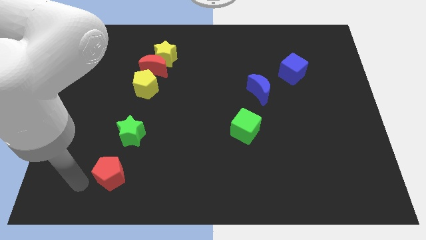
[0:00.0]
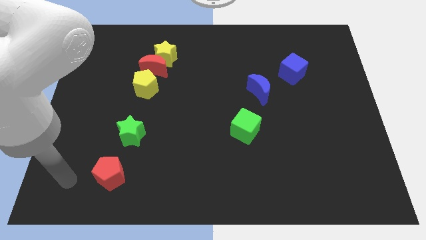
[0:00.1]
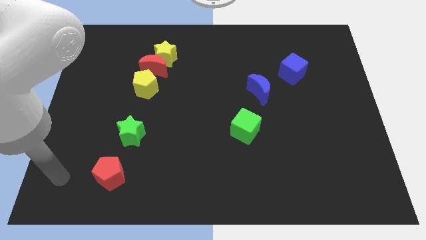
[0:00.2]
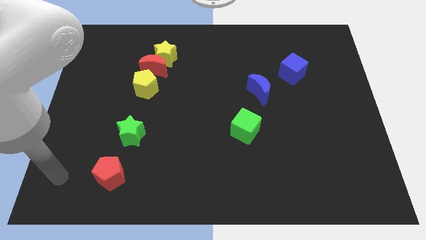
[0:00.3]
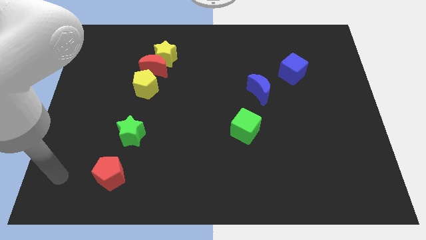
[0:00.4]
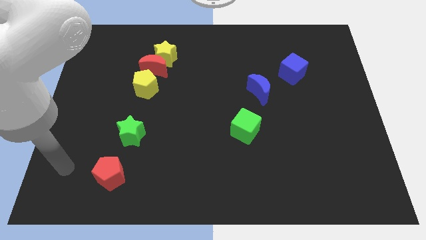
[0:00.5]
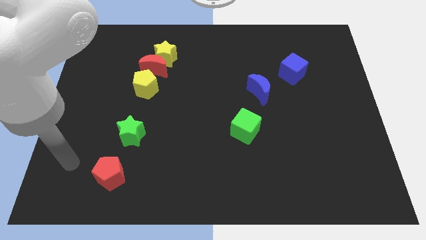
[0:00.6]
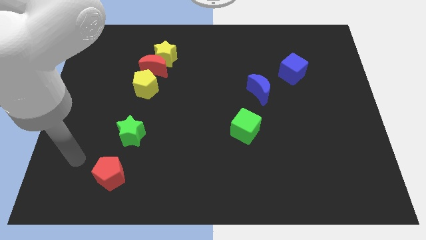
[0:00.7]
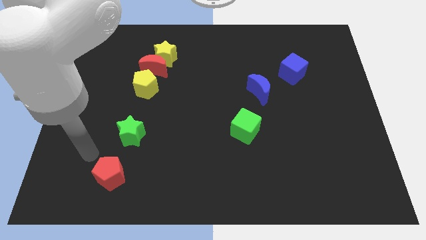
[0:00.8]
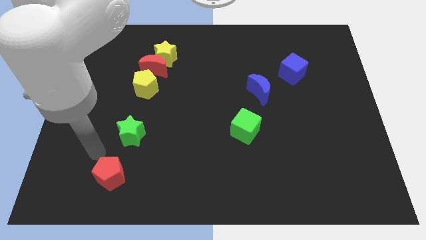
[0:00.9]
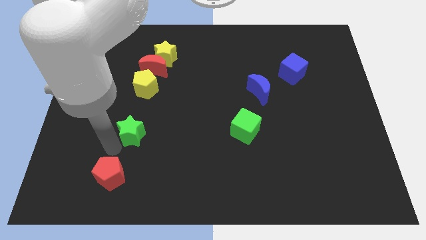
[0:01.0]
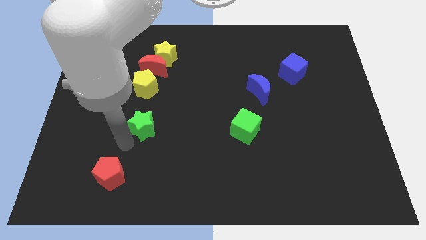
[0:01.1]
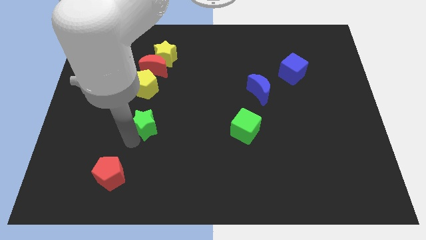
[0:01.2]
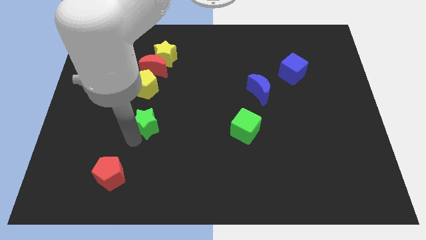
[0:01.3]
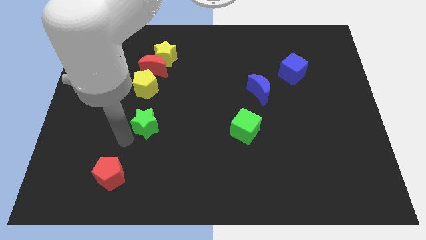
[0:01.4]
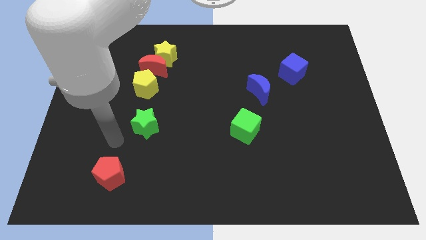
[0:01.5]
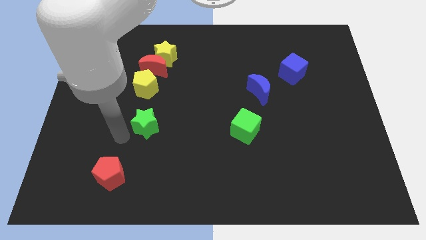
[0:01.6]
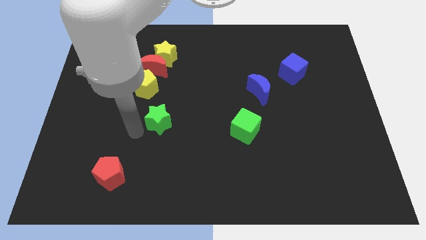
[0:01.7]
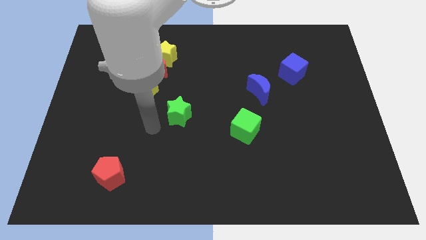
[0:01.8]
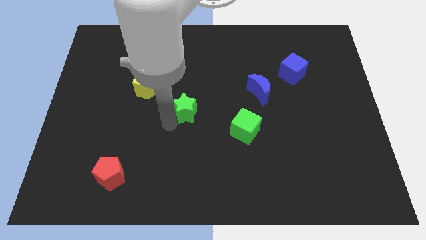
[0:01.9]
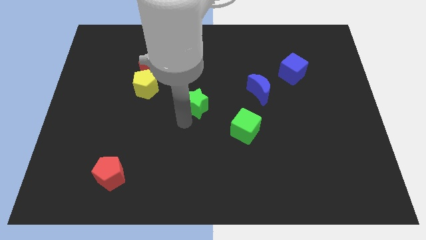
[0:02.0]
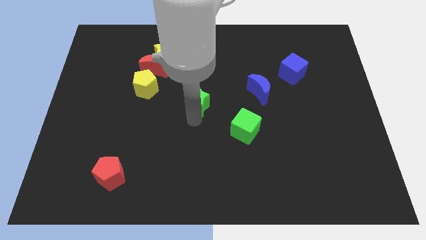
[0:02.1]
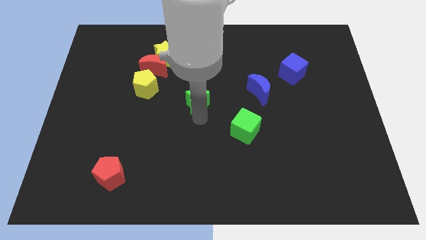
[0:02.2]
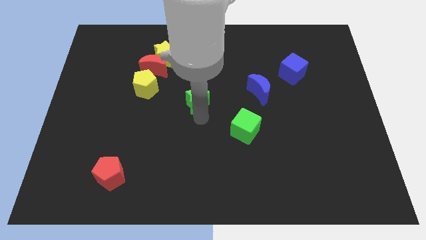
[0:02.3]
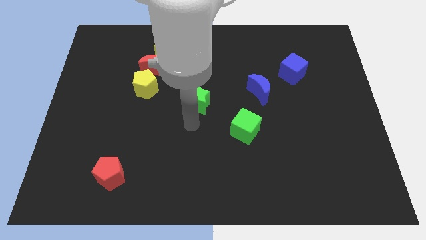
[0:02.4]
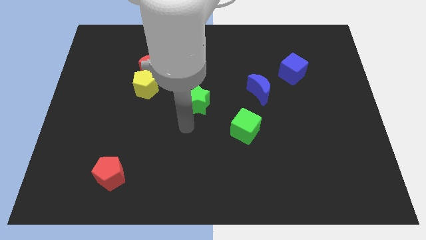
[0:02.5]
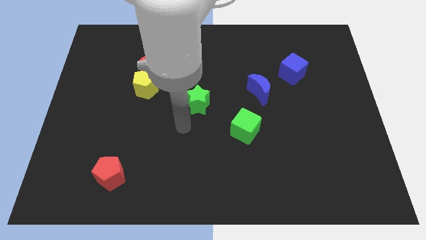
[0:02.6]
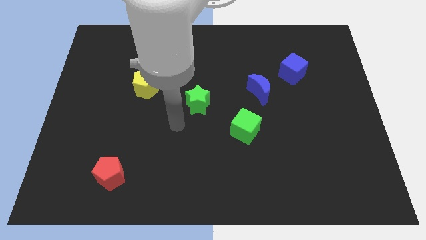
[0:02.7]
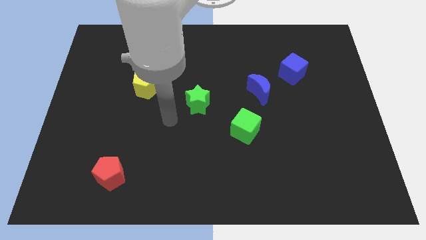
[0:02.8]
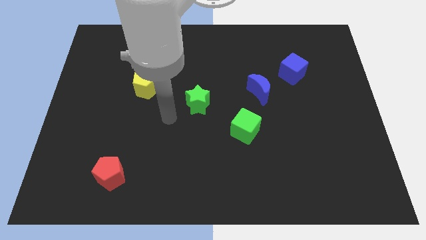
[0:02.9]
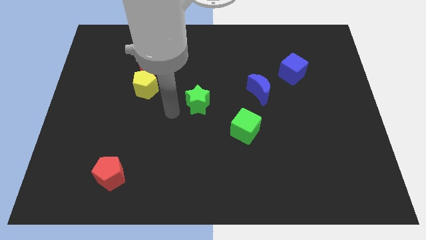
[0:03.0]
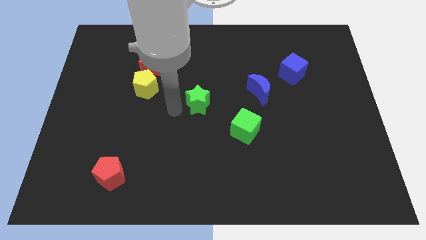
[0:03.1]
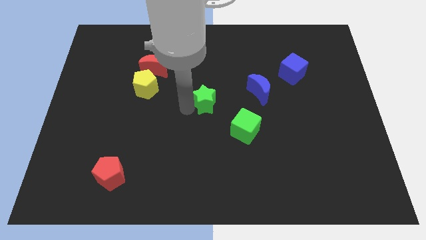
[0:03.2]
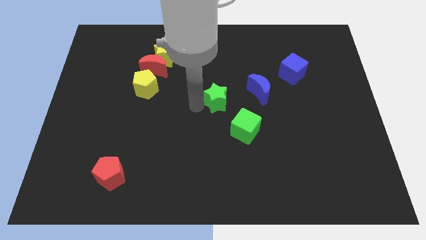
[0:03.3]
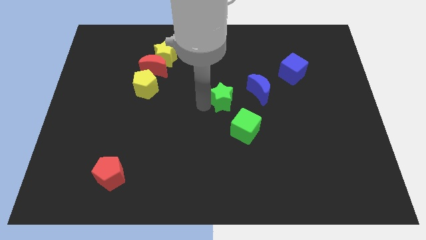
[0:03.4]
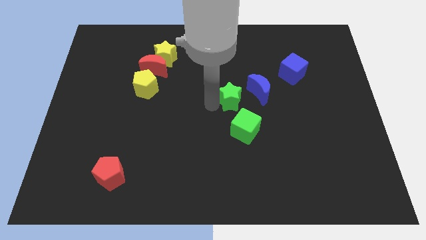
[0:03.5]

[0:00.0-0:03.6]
push the green star to the center of the board

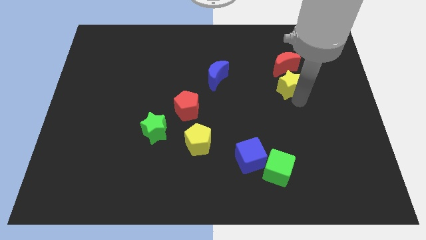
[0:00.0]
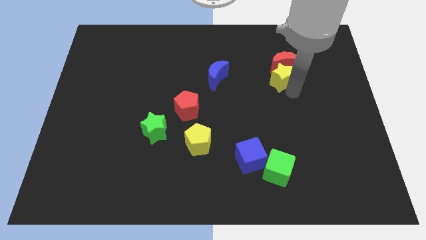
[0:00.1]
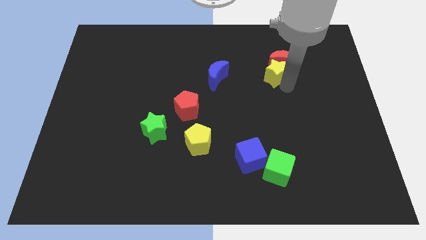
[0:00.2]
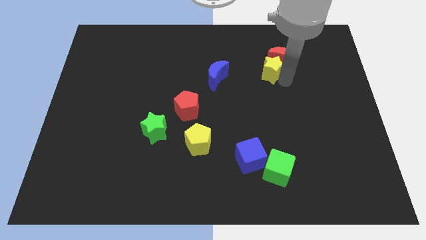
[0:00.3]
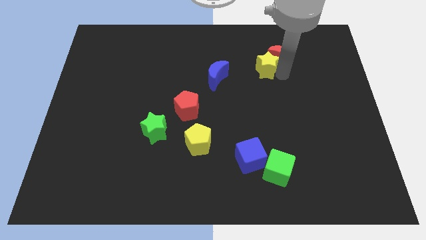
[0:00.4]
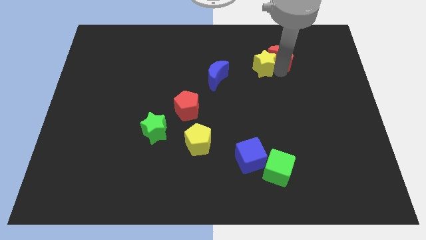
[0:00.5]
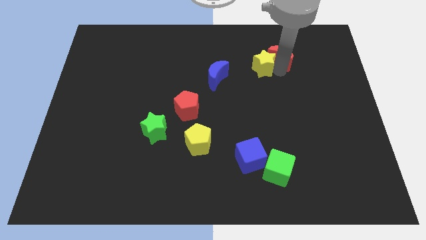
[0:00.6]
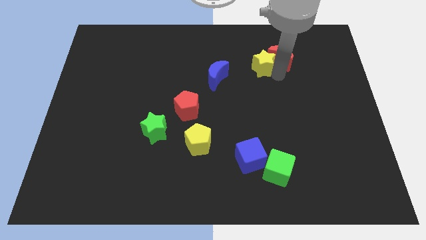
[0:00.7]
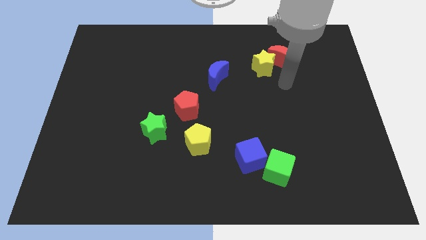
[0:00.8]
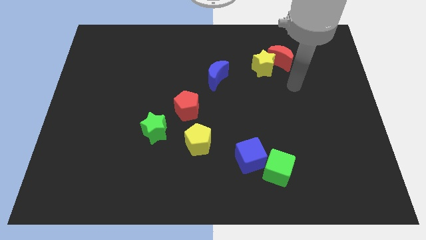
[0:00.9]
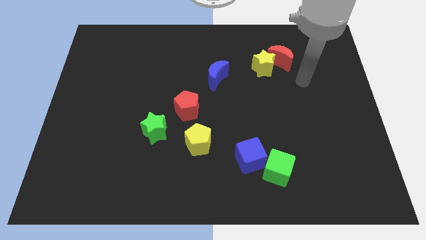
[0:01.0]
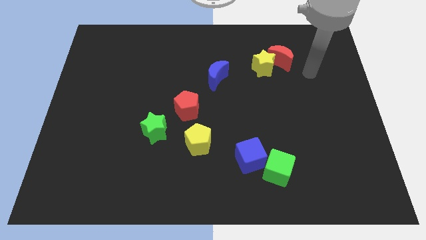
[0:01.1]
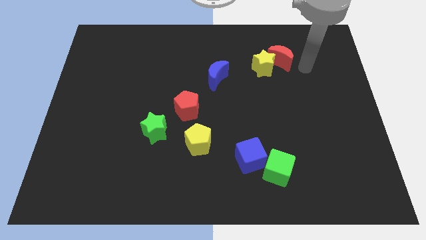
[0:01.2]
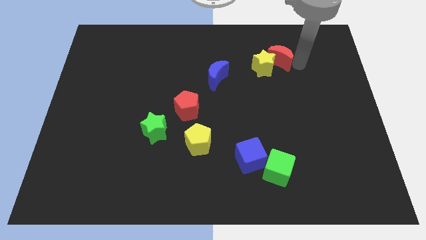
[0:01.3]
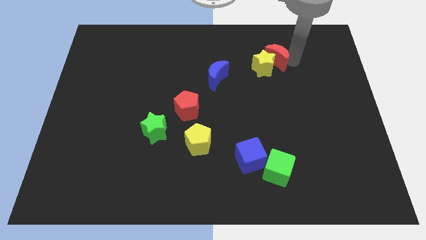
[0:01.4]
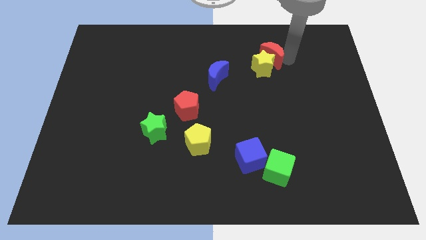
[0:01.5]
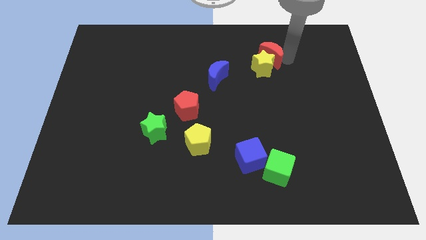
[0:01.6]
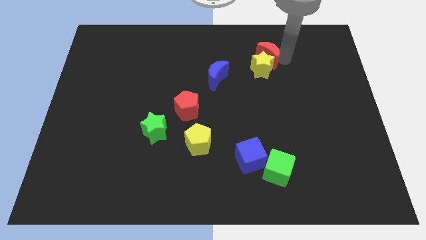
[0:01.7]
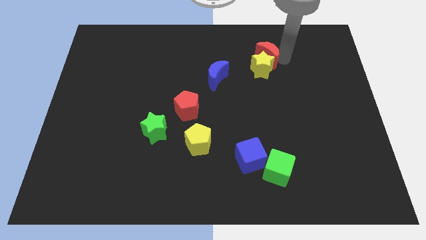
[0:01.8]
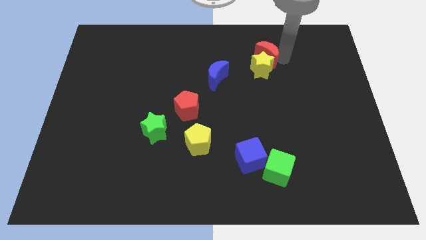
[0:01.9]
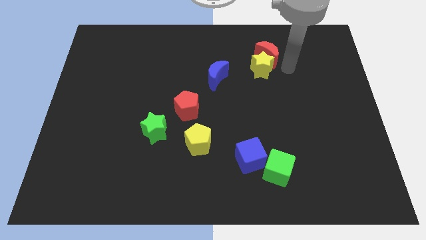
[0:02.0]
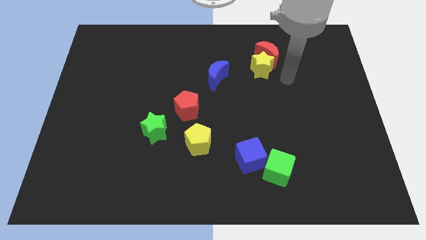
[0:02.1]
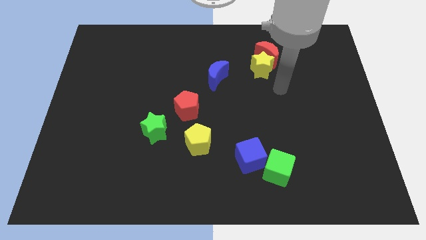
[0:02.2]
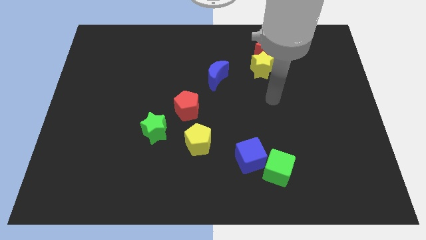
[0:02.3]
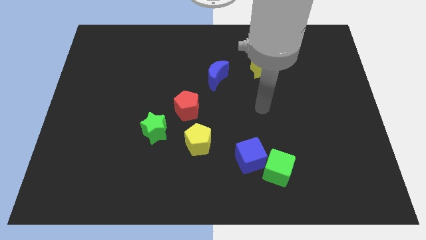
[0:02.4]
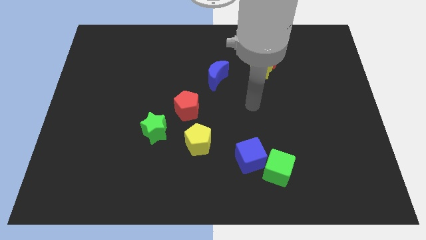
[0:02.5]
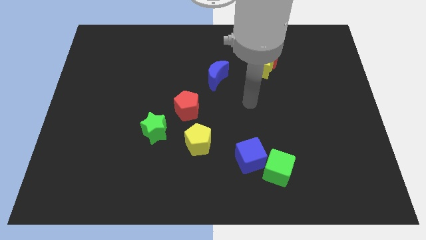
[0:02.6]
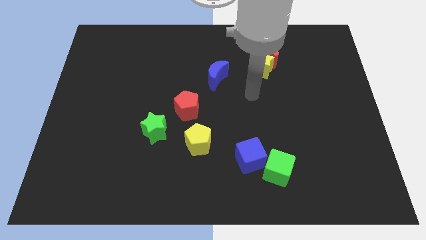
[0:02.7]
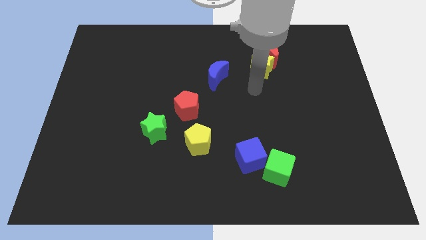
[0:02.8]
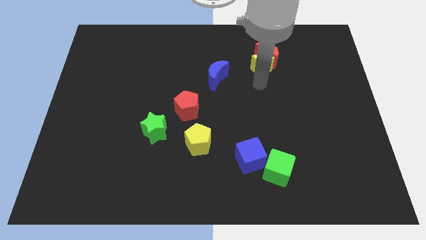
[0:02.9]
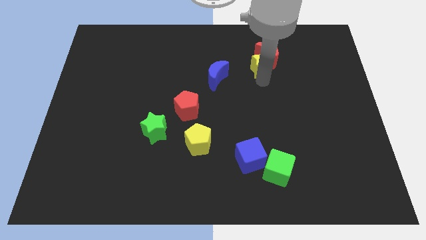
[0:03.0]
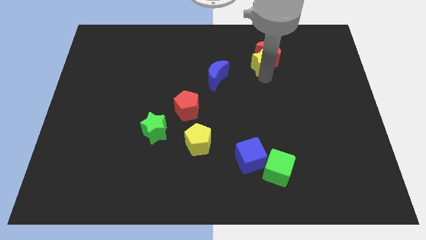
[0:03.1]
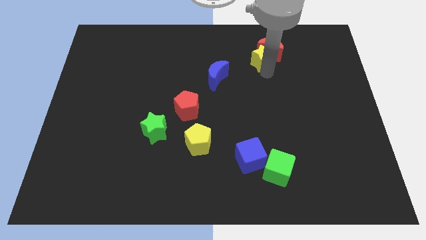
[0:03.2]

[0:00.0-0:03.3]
push the yellow star along with the red crescent slightly towards up

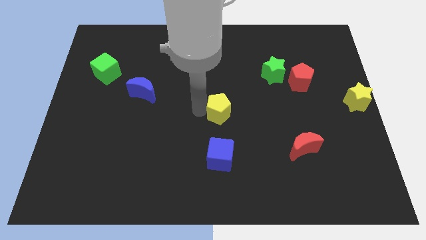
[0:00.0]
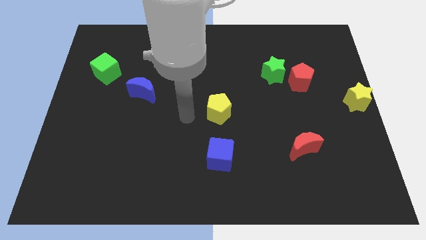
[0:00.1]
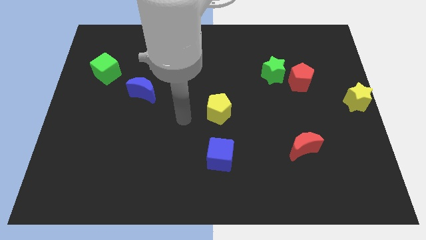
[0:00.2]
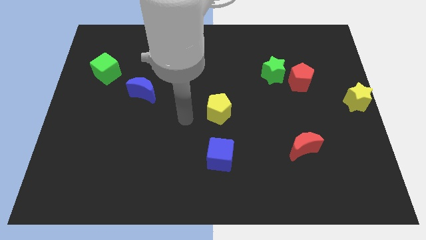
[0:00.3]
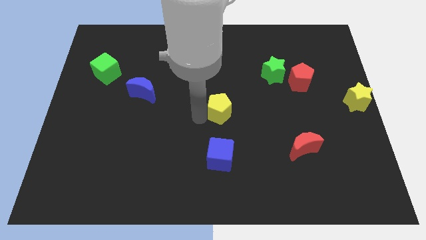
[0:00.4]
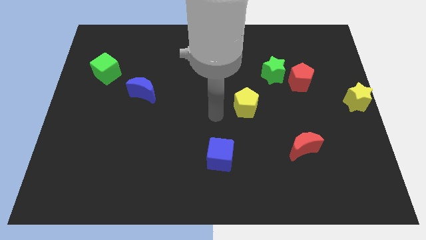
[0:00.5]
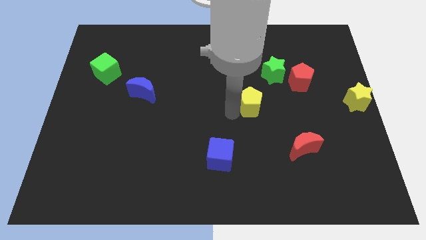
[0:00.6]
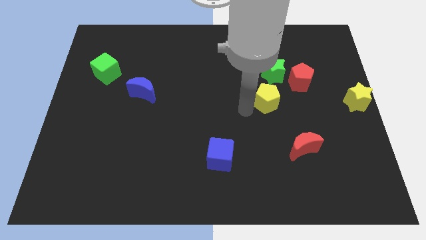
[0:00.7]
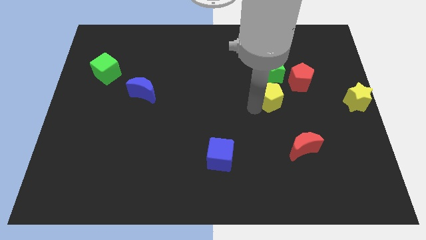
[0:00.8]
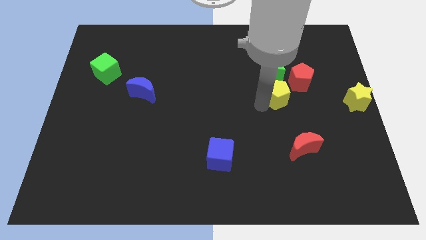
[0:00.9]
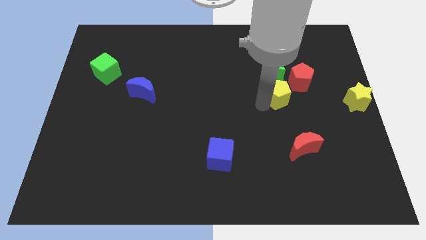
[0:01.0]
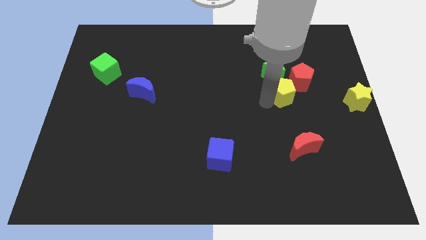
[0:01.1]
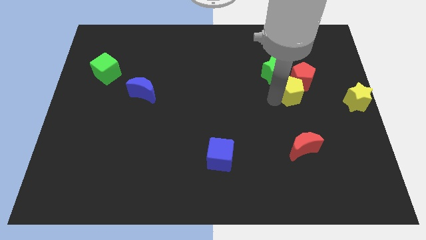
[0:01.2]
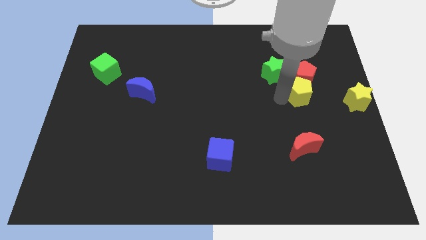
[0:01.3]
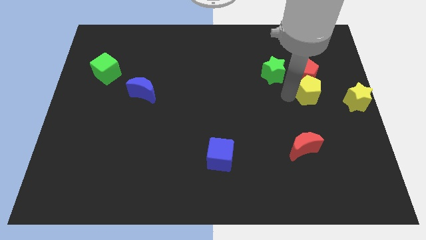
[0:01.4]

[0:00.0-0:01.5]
drag yellow pentagon to the bottom of red pentagon

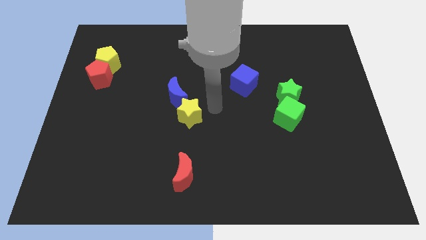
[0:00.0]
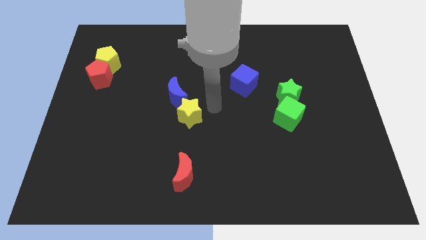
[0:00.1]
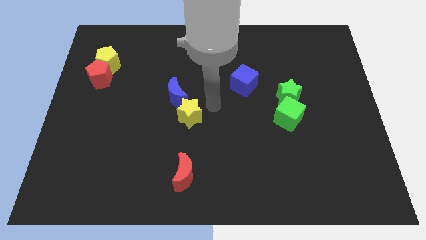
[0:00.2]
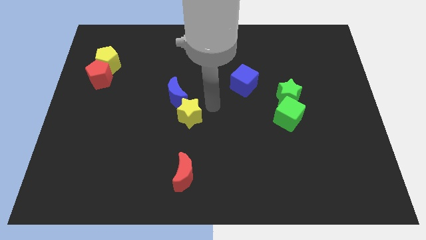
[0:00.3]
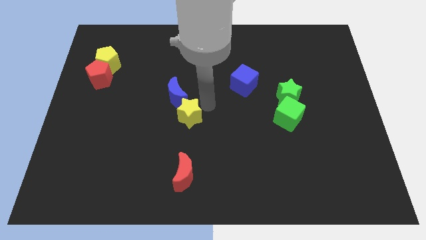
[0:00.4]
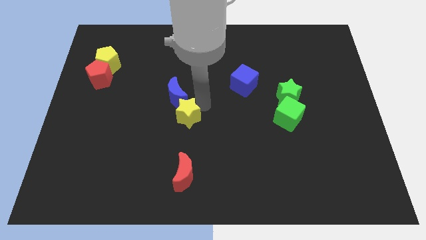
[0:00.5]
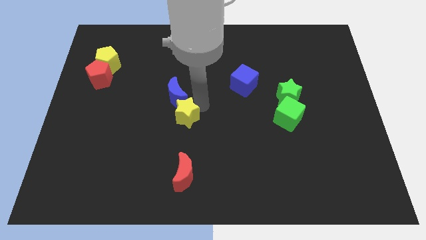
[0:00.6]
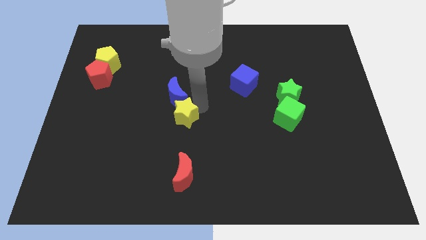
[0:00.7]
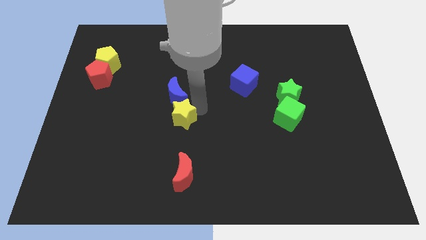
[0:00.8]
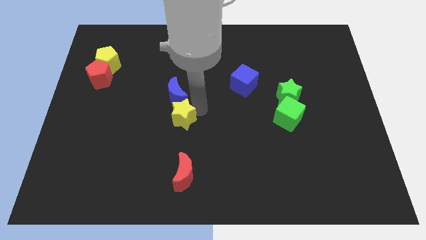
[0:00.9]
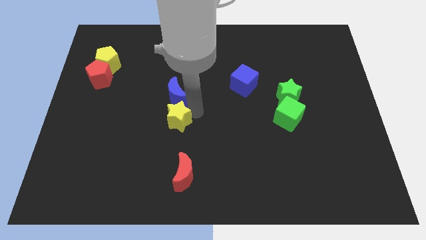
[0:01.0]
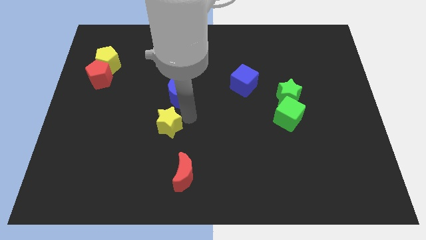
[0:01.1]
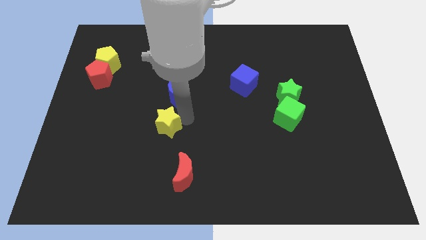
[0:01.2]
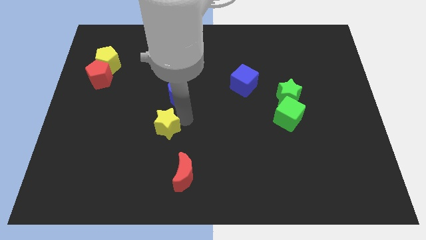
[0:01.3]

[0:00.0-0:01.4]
place the yellow star to below to the blue moon
